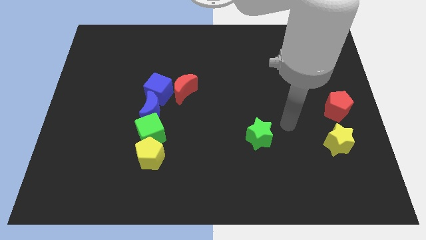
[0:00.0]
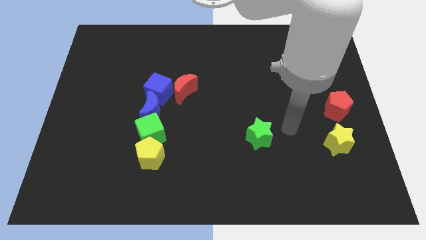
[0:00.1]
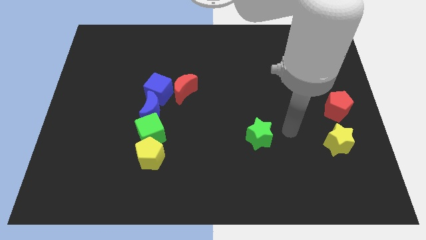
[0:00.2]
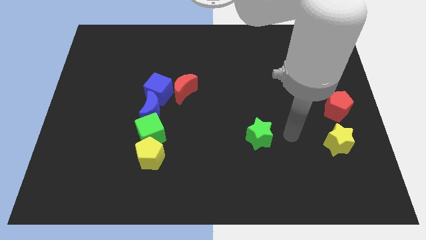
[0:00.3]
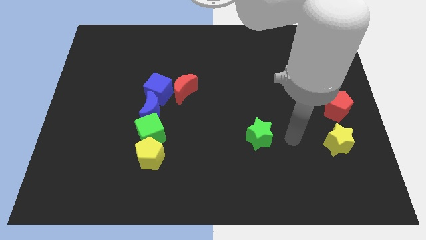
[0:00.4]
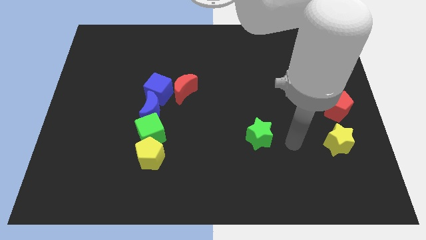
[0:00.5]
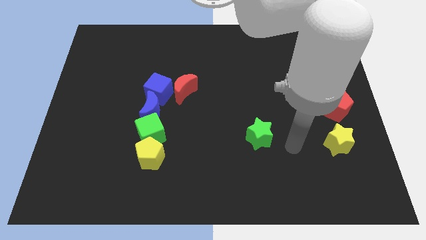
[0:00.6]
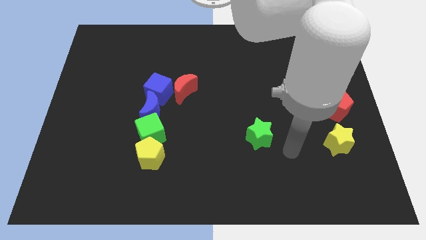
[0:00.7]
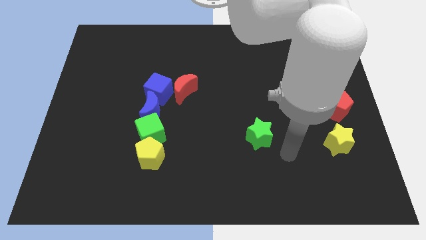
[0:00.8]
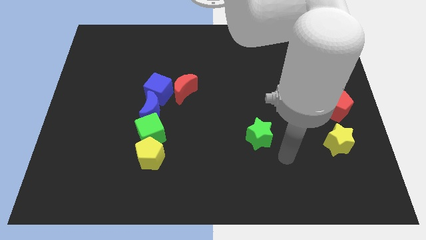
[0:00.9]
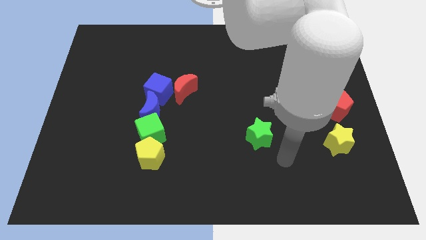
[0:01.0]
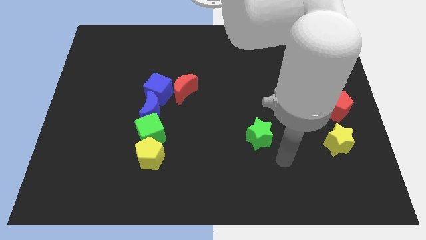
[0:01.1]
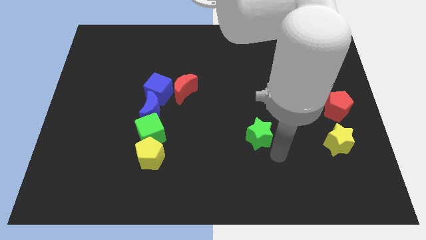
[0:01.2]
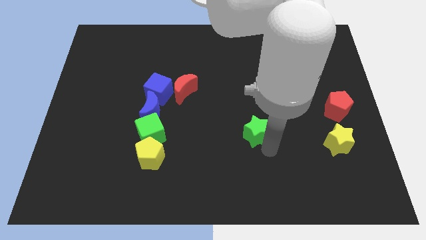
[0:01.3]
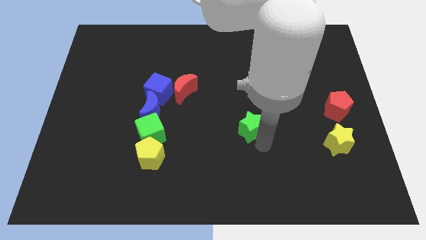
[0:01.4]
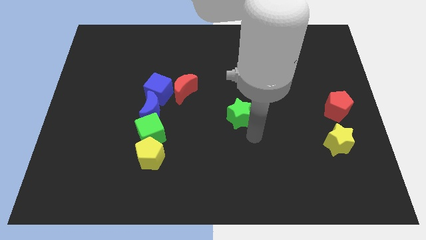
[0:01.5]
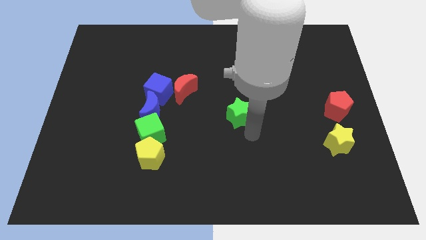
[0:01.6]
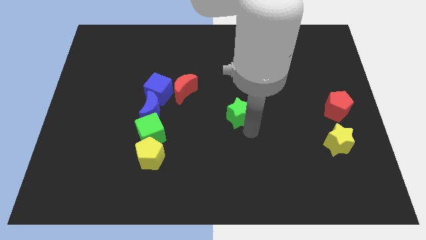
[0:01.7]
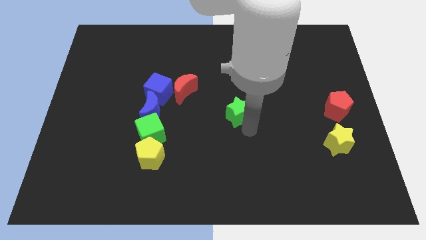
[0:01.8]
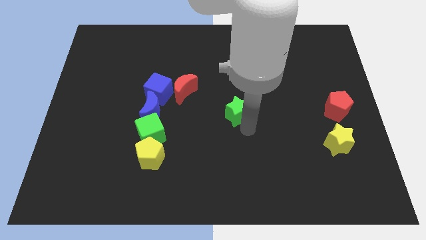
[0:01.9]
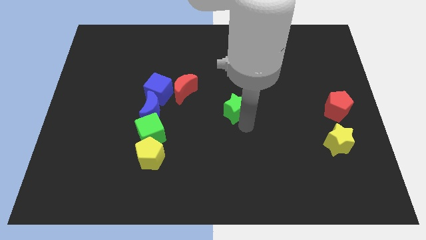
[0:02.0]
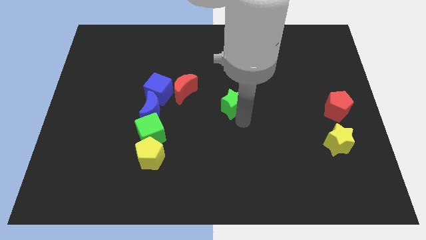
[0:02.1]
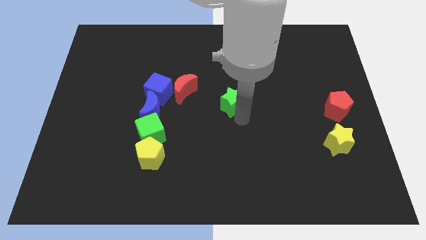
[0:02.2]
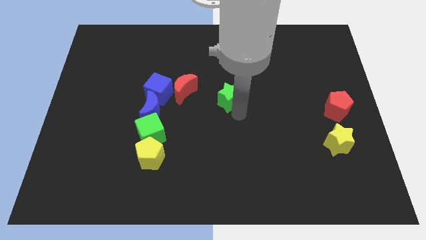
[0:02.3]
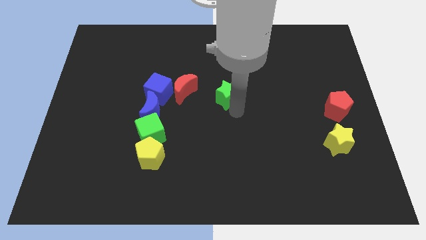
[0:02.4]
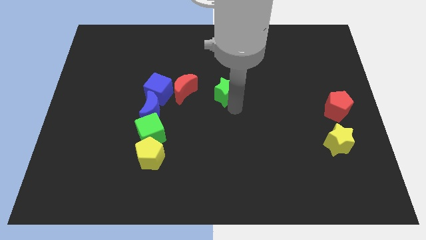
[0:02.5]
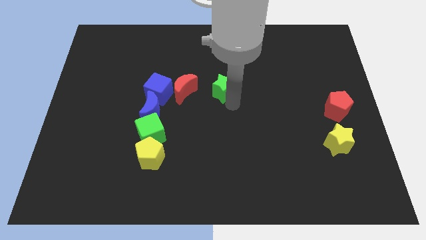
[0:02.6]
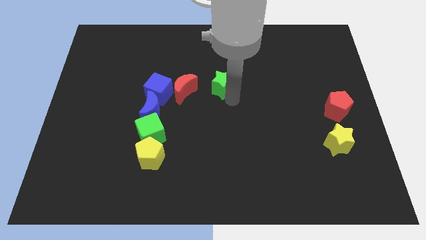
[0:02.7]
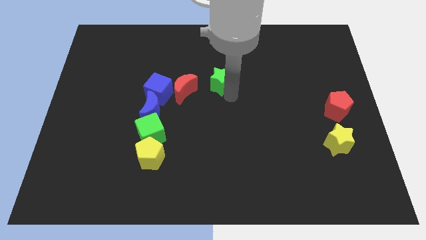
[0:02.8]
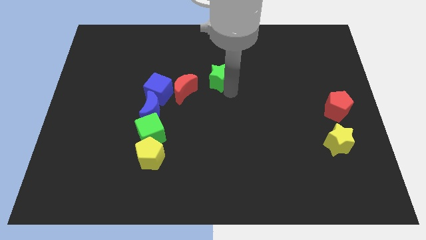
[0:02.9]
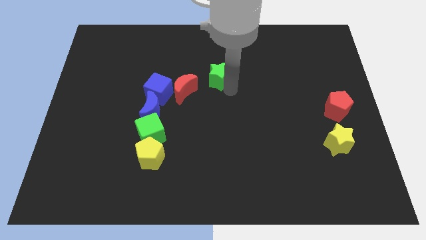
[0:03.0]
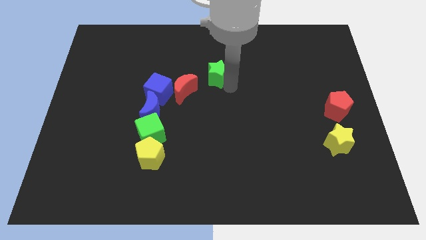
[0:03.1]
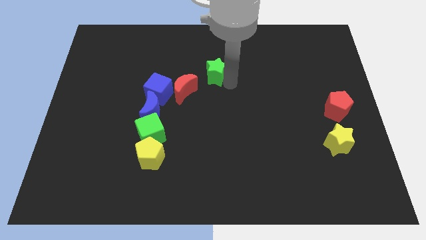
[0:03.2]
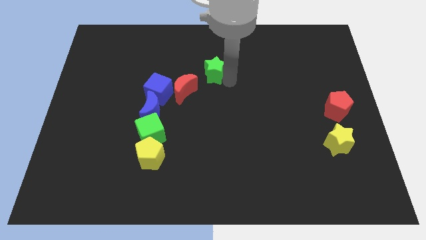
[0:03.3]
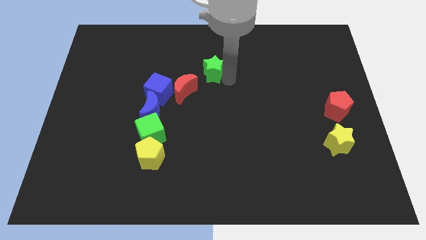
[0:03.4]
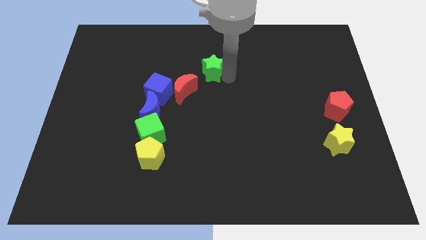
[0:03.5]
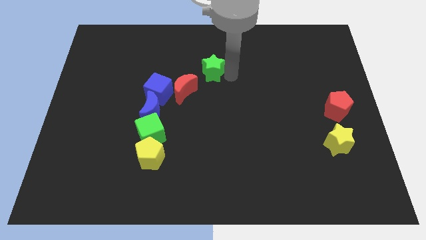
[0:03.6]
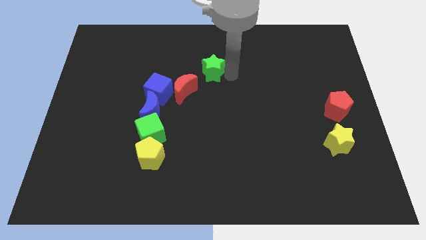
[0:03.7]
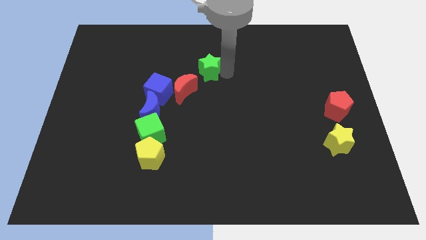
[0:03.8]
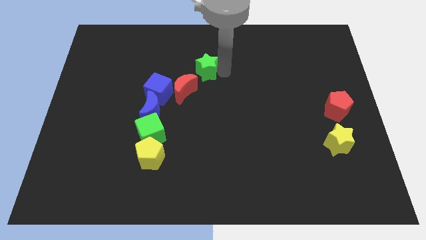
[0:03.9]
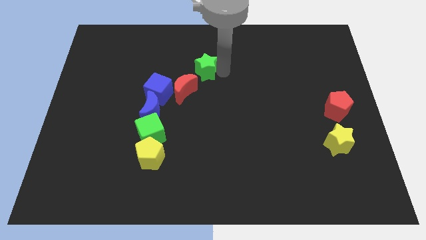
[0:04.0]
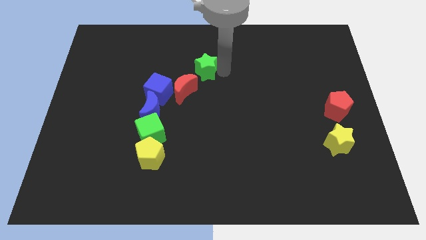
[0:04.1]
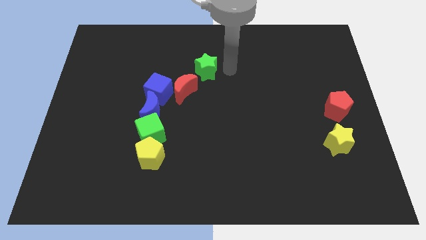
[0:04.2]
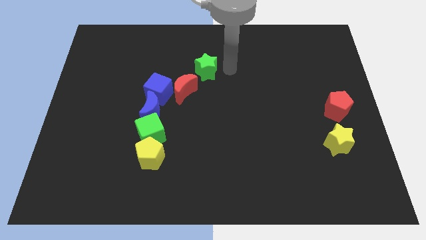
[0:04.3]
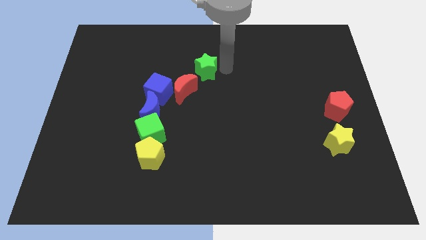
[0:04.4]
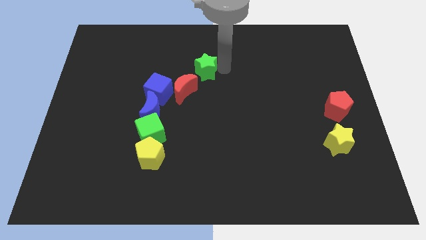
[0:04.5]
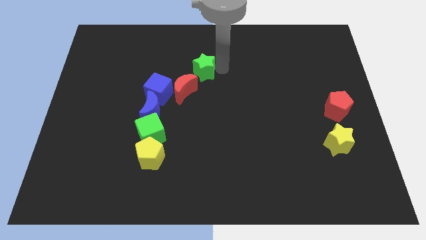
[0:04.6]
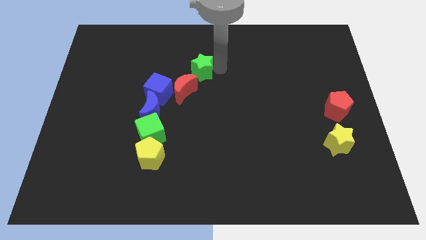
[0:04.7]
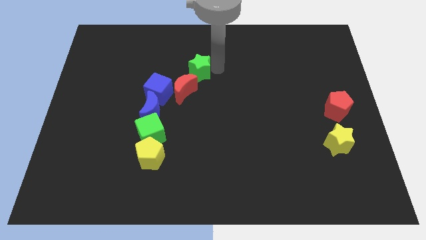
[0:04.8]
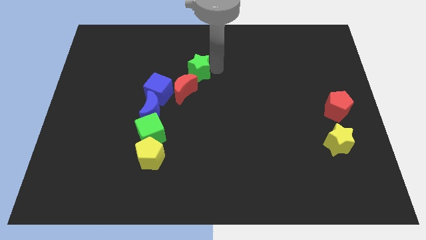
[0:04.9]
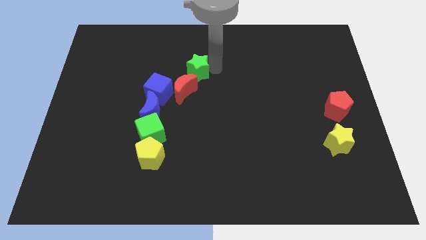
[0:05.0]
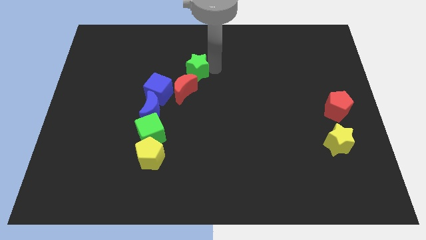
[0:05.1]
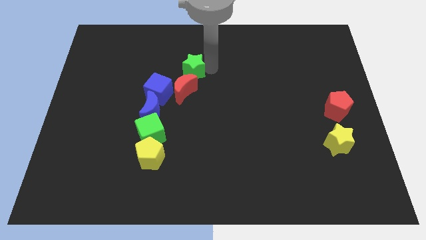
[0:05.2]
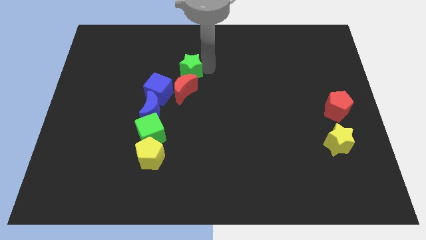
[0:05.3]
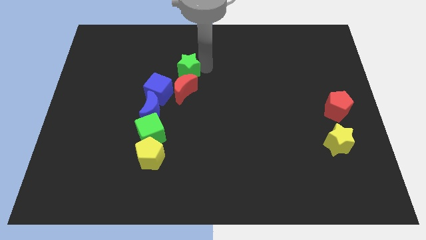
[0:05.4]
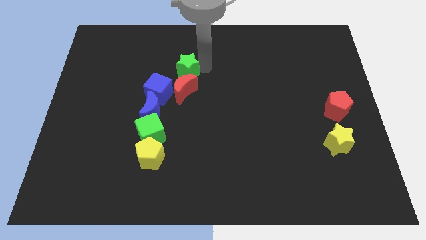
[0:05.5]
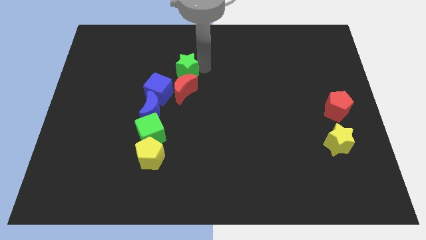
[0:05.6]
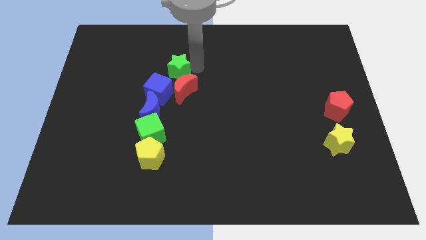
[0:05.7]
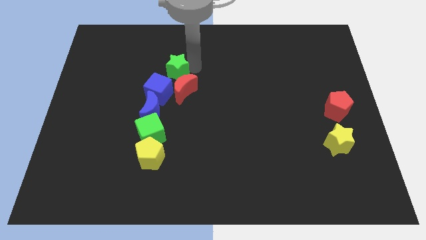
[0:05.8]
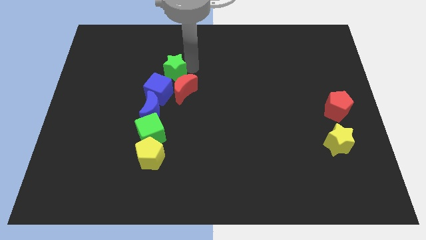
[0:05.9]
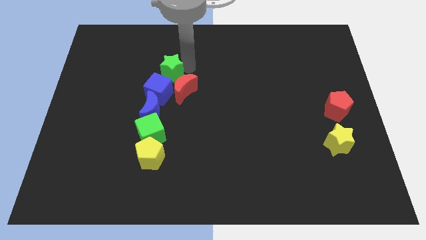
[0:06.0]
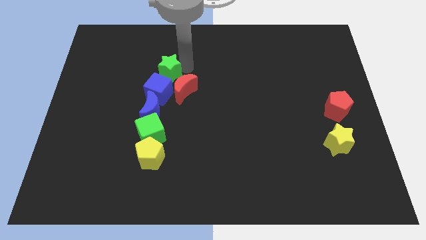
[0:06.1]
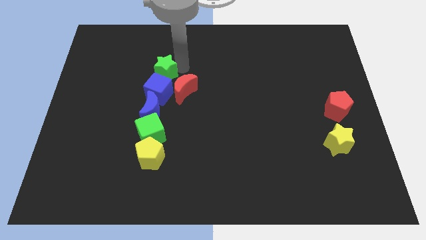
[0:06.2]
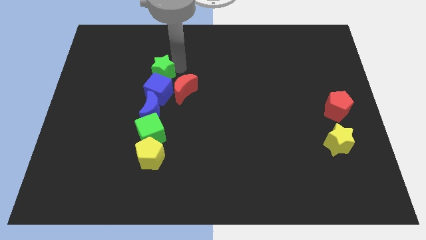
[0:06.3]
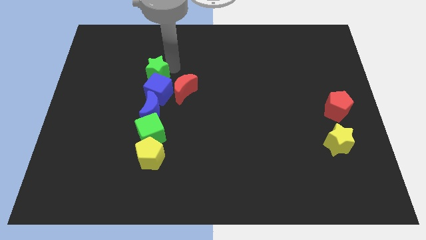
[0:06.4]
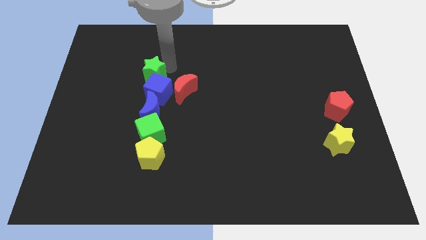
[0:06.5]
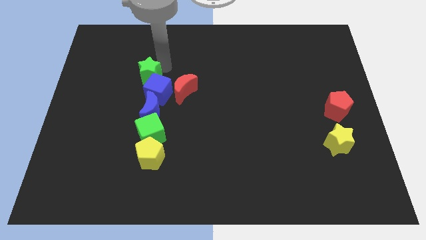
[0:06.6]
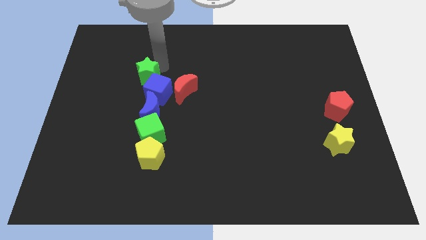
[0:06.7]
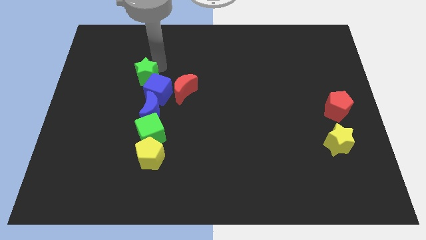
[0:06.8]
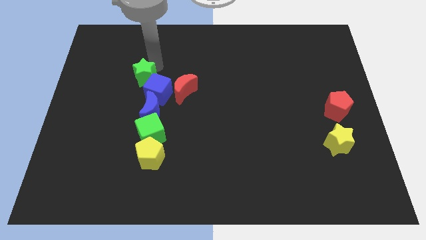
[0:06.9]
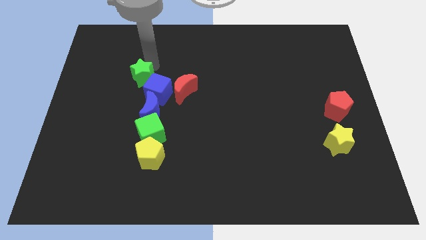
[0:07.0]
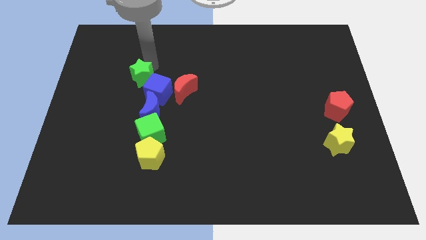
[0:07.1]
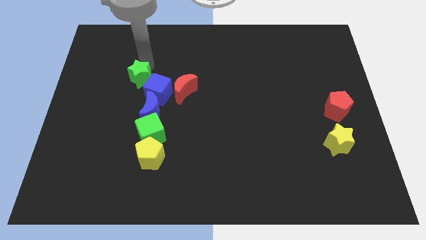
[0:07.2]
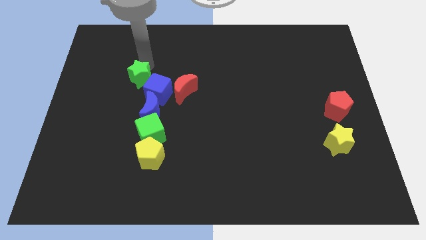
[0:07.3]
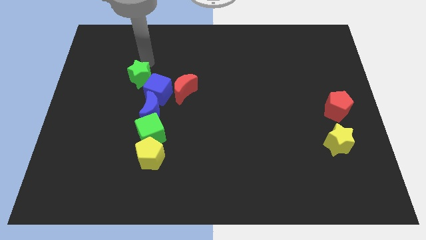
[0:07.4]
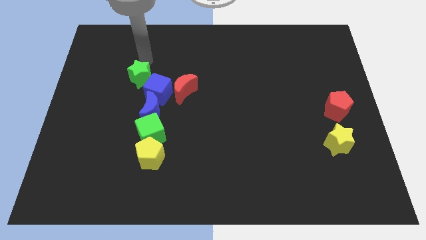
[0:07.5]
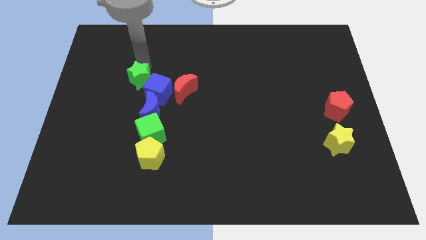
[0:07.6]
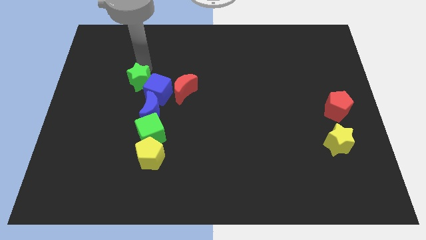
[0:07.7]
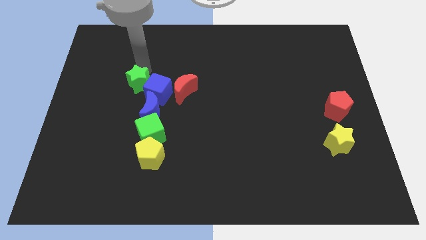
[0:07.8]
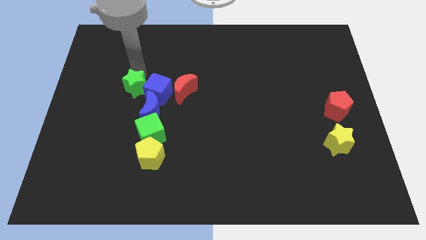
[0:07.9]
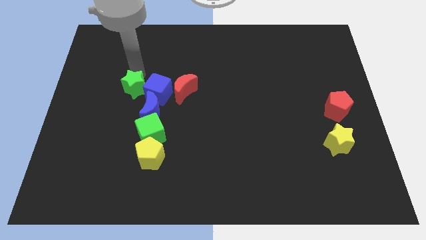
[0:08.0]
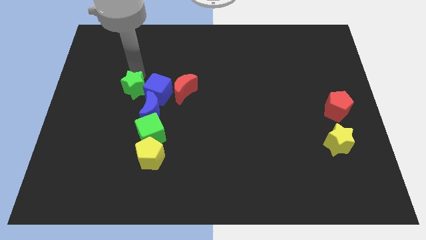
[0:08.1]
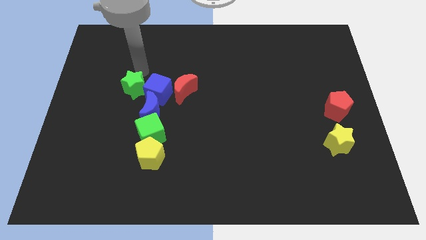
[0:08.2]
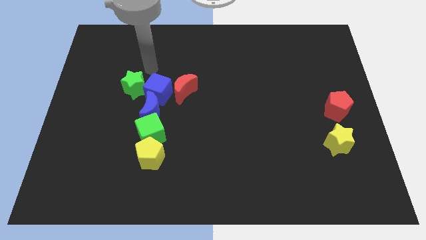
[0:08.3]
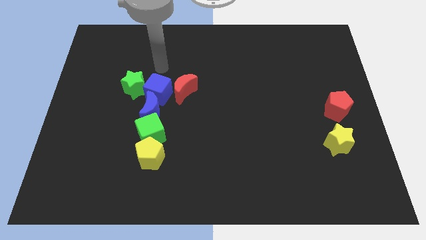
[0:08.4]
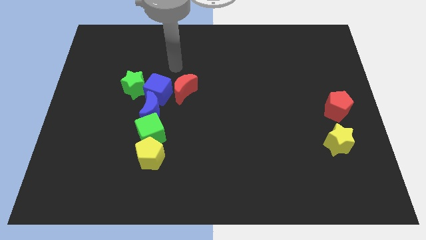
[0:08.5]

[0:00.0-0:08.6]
place the green star on the left side of the blue cube

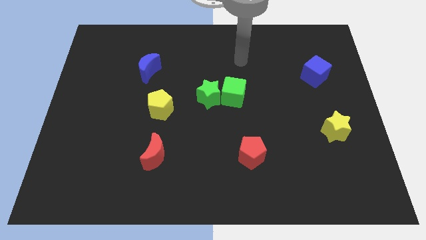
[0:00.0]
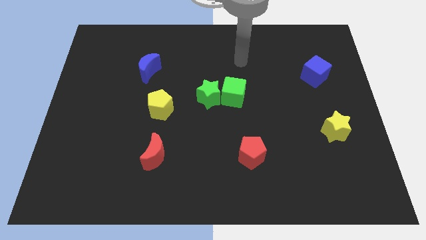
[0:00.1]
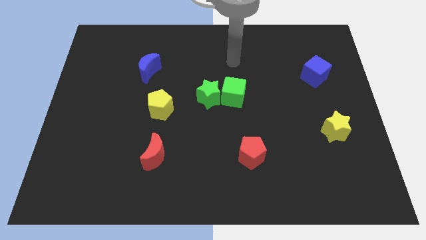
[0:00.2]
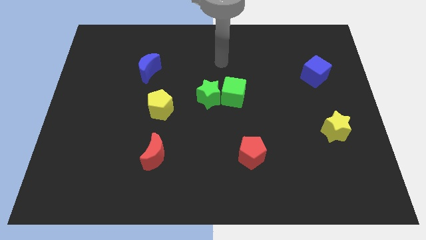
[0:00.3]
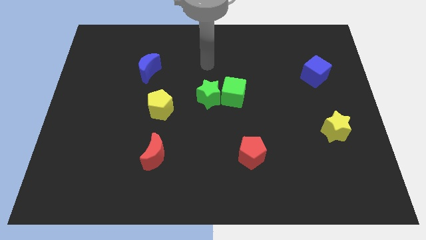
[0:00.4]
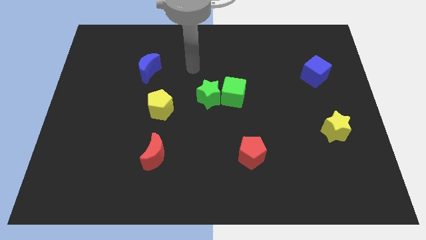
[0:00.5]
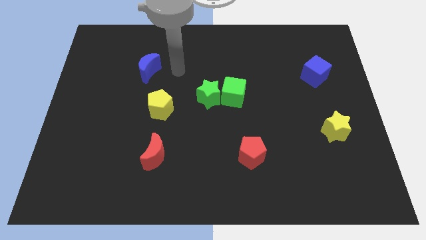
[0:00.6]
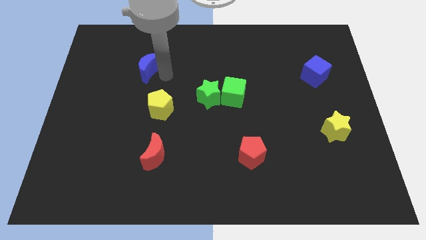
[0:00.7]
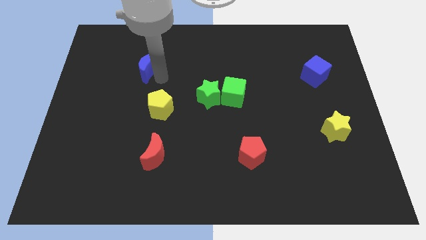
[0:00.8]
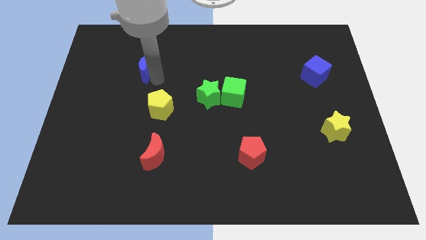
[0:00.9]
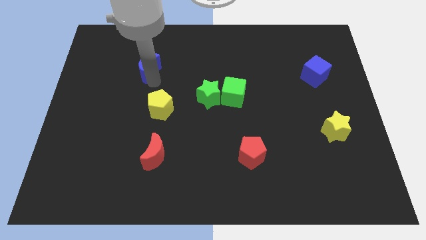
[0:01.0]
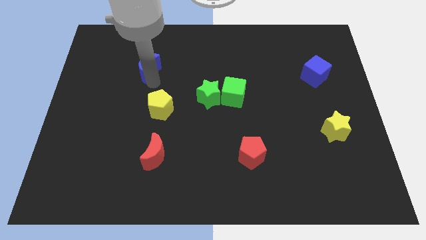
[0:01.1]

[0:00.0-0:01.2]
place your hand below the blue crescent
